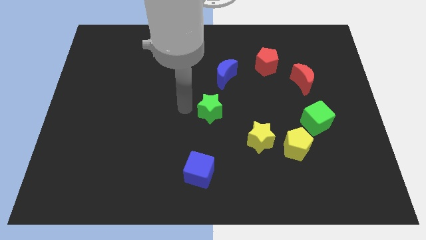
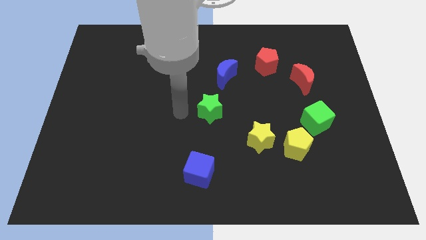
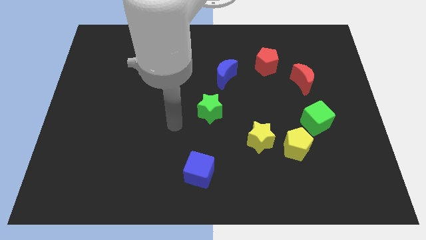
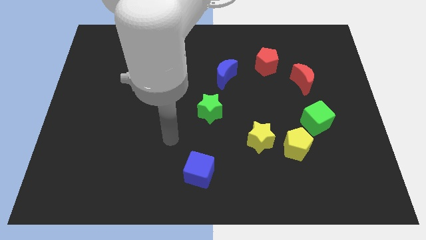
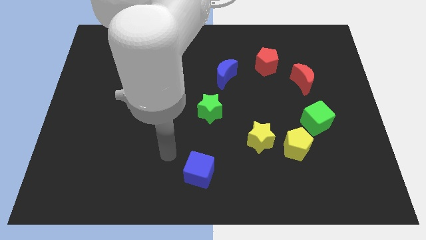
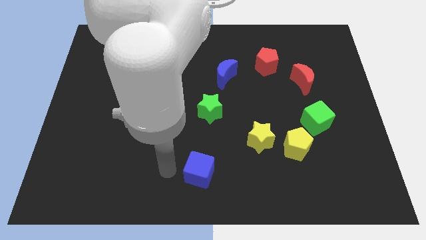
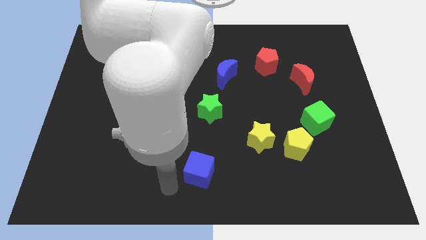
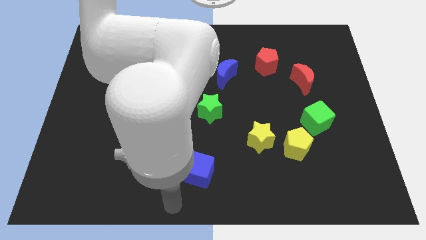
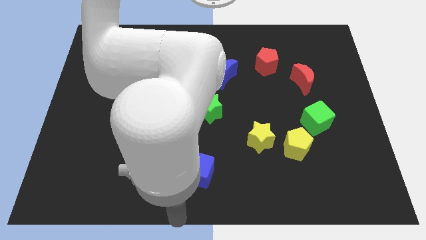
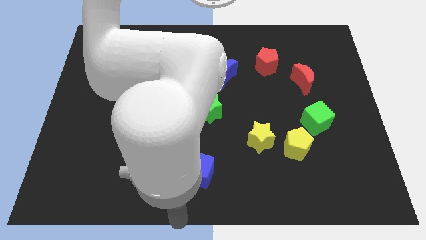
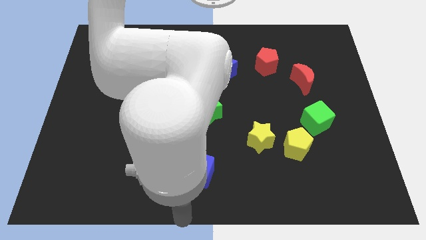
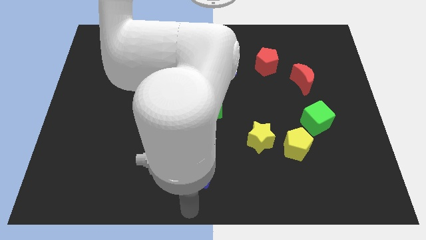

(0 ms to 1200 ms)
move your hand towards the bottom center of the board

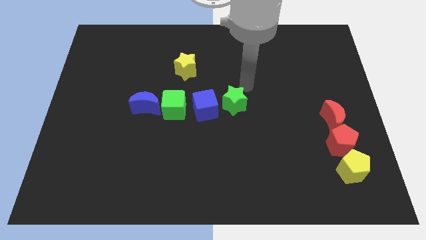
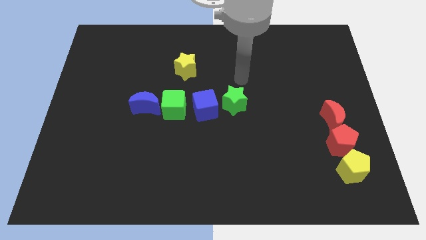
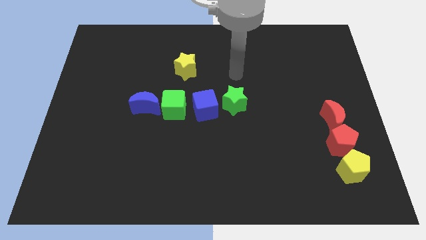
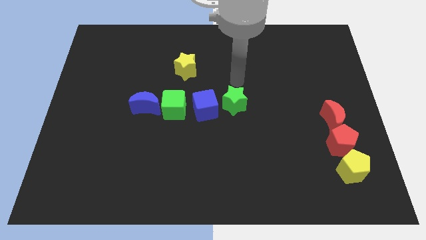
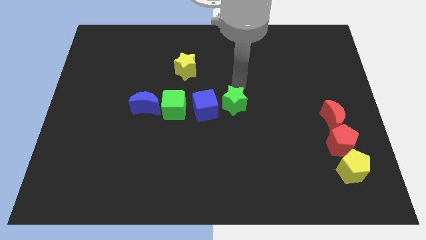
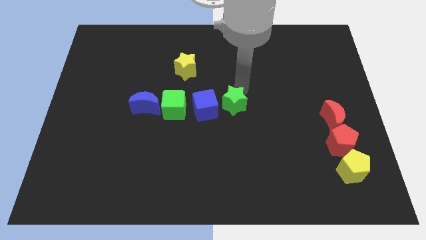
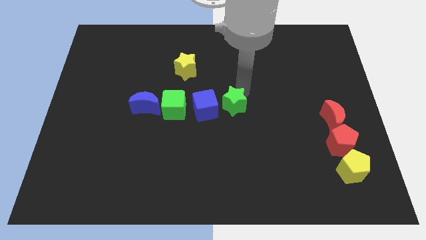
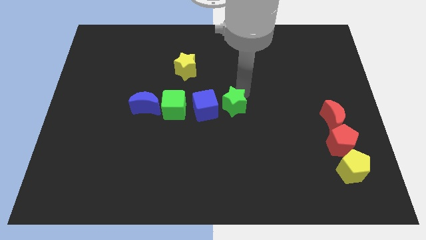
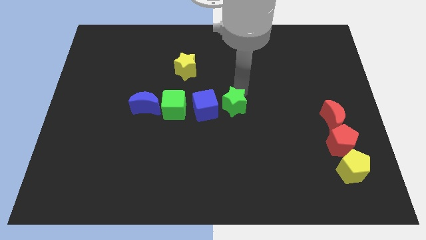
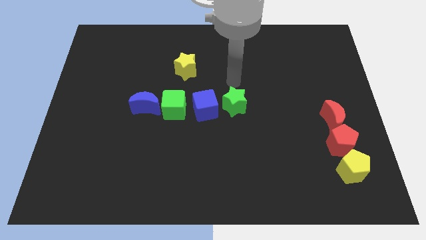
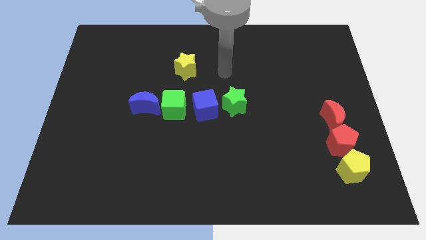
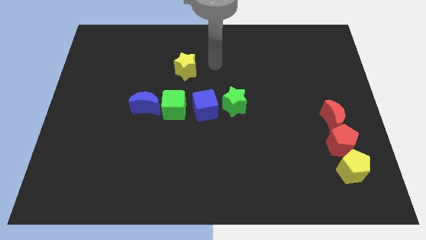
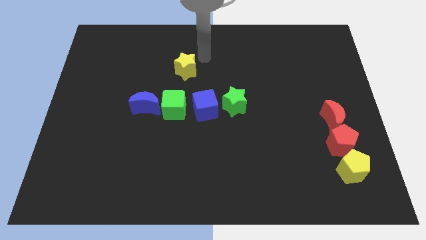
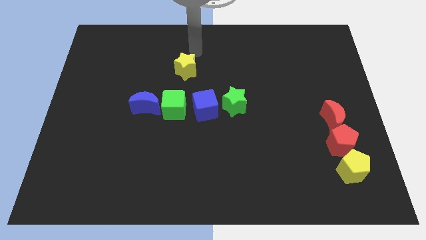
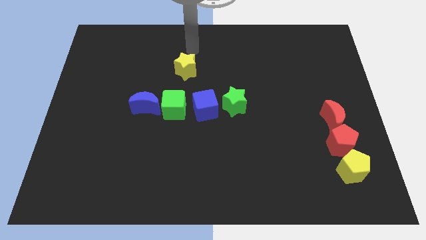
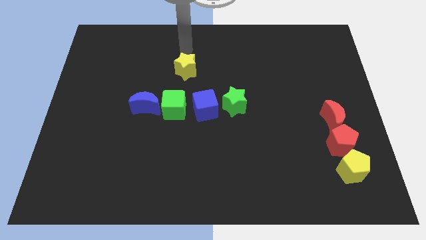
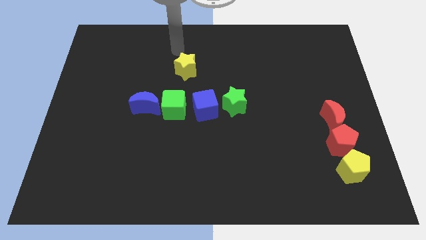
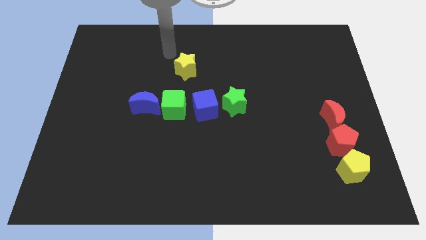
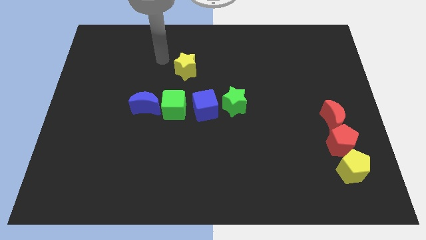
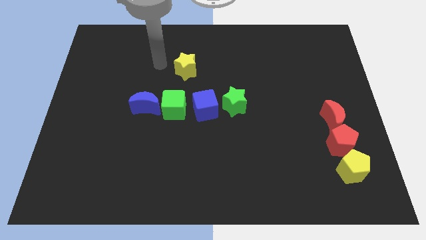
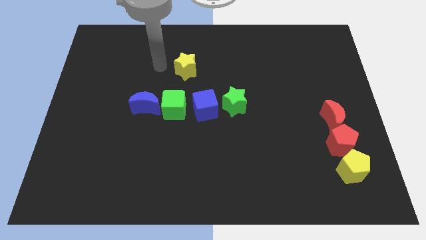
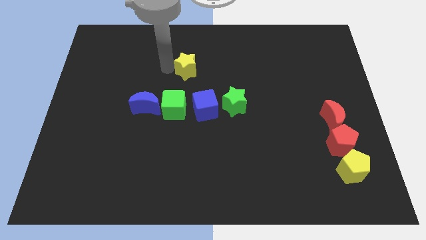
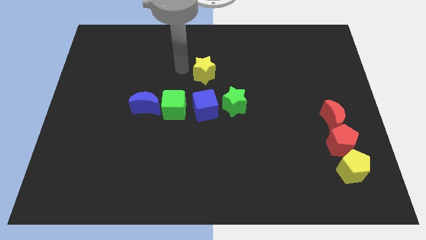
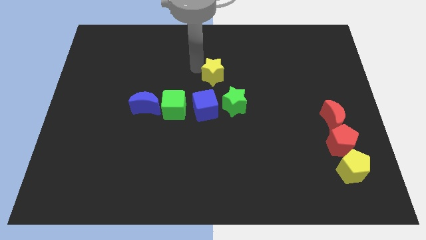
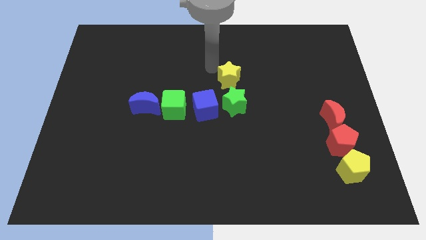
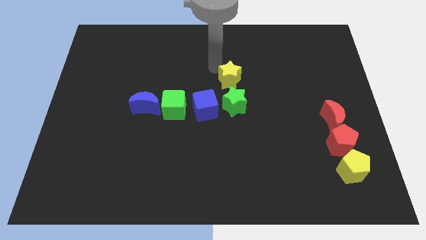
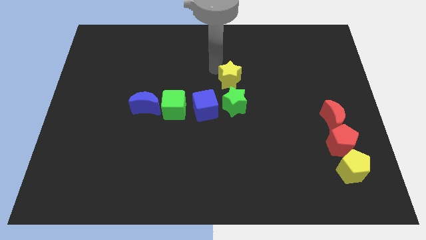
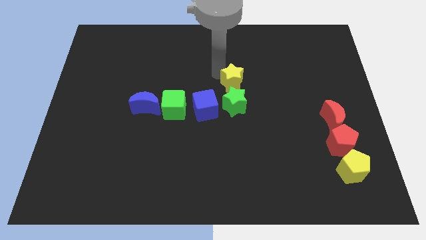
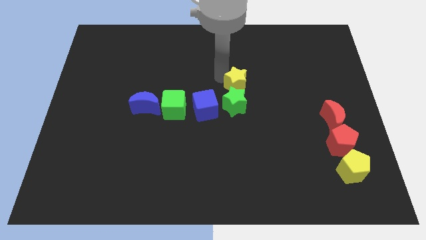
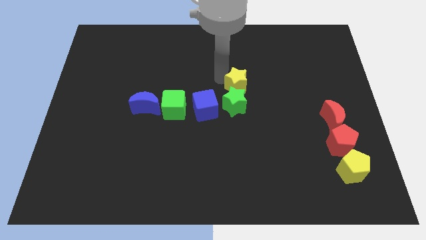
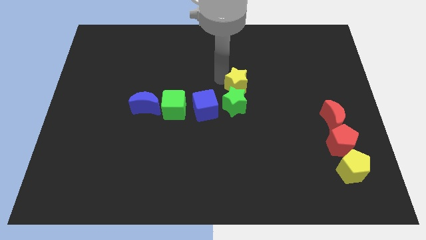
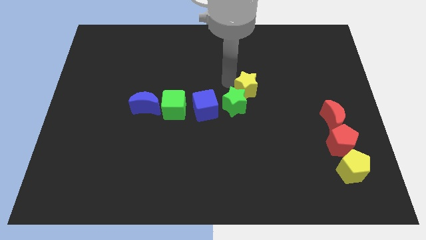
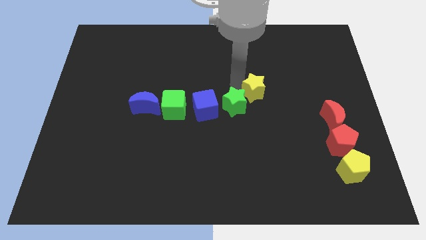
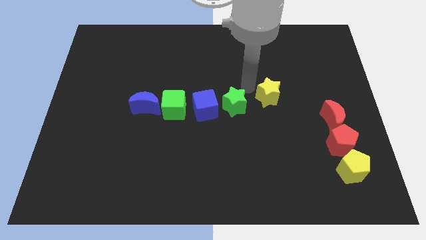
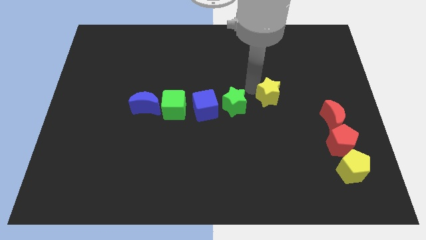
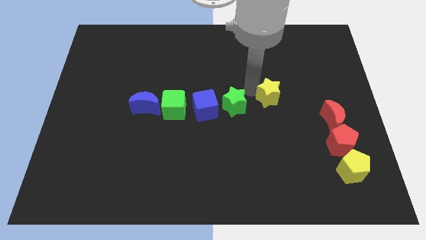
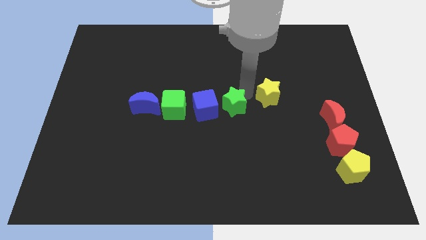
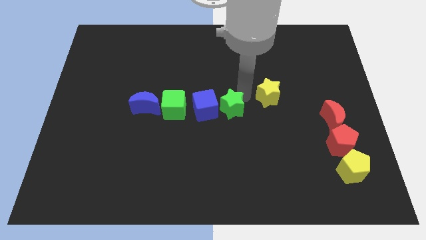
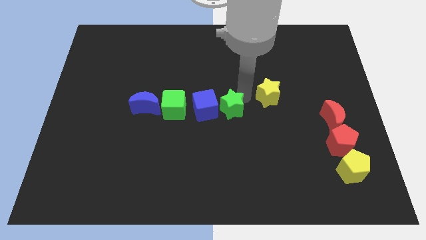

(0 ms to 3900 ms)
put the yellow star to the right of the green star

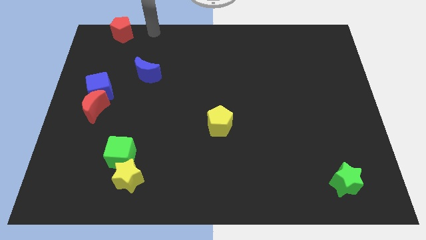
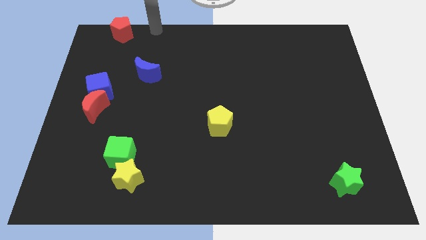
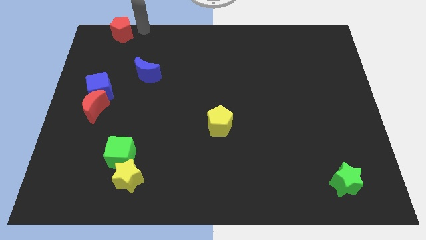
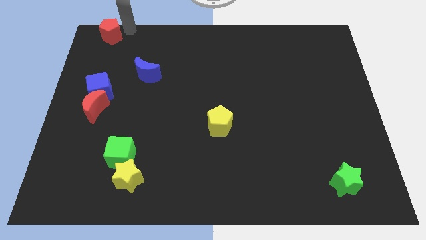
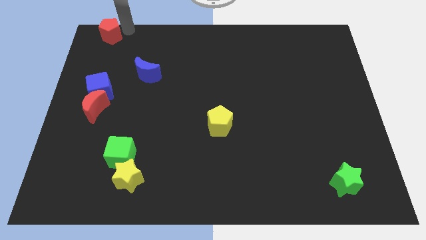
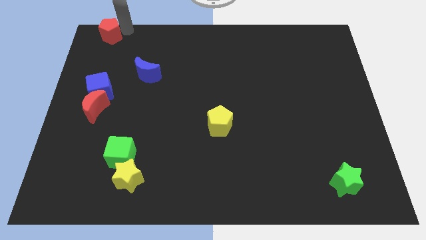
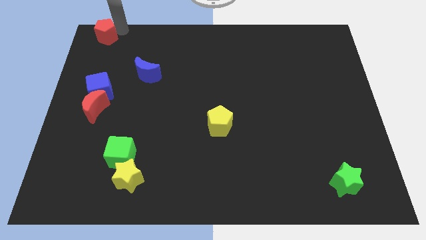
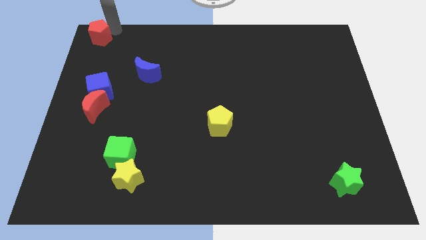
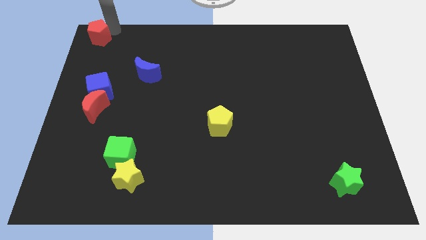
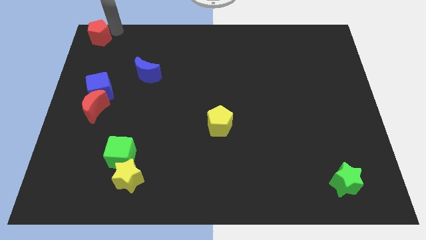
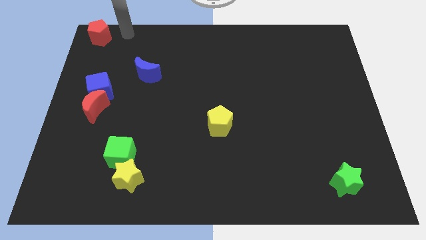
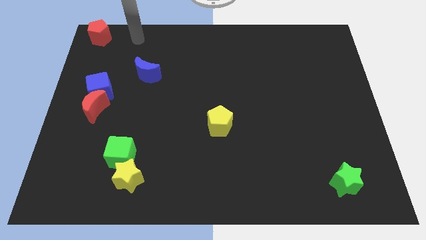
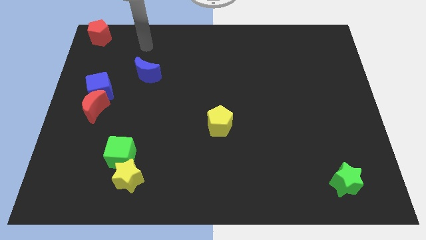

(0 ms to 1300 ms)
drag the red pentagon to the top left

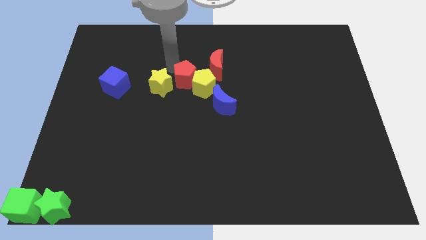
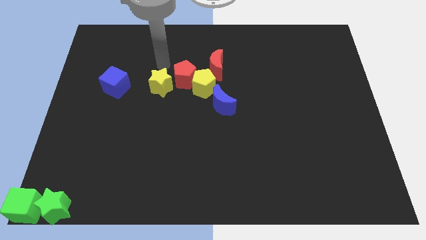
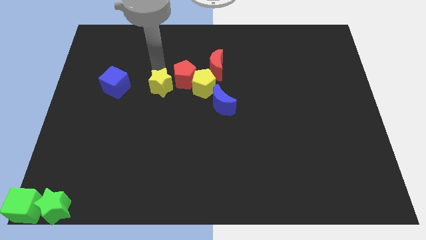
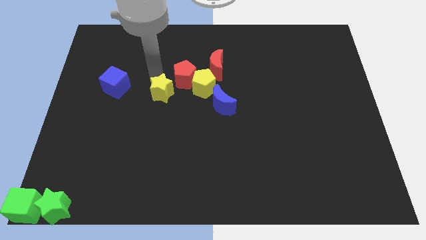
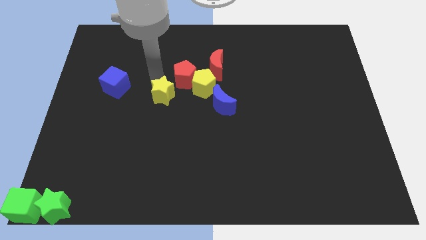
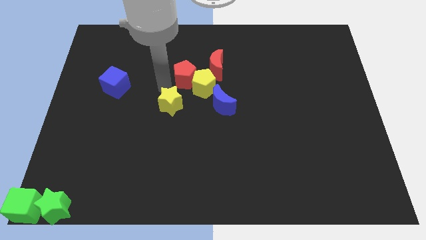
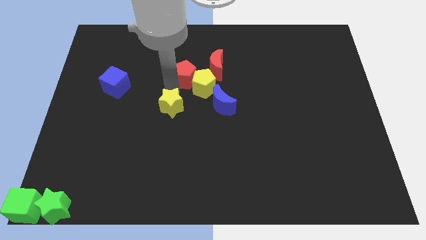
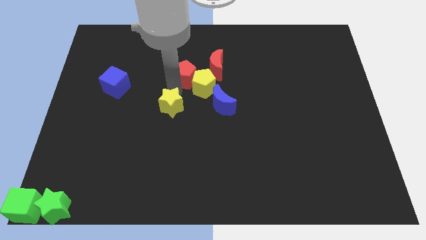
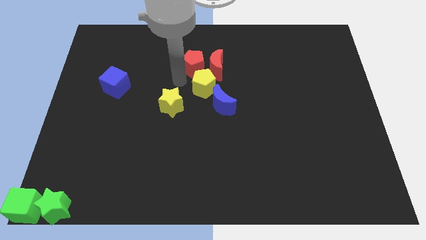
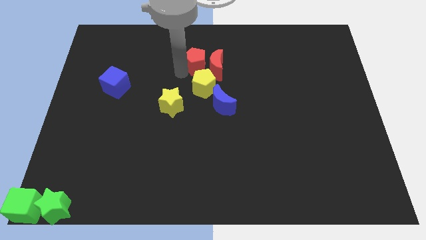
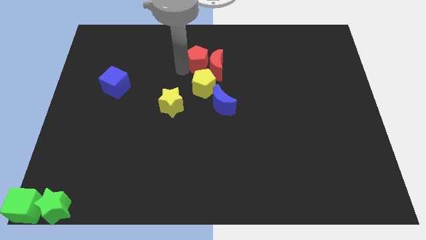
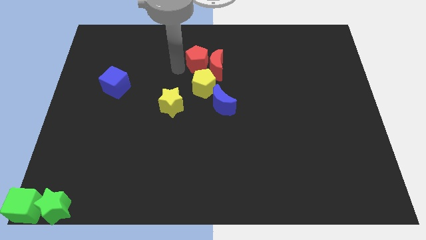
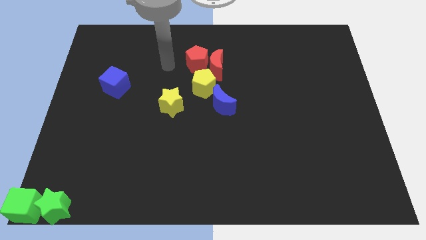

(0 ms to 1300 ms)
separate the red pentagon and the yellow star

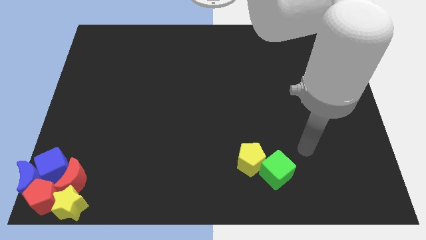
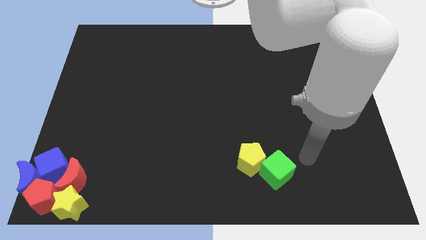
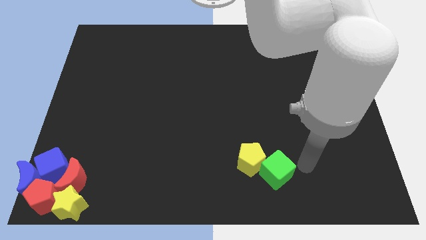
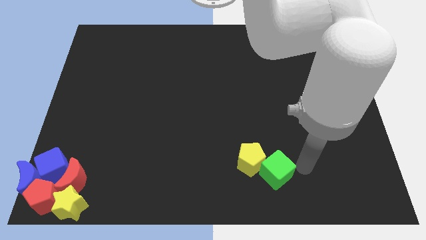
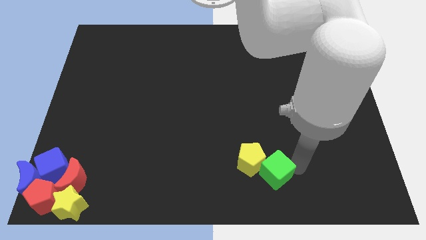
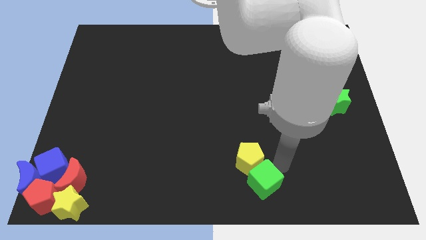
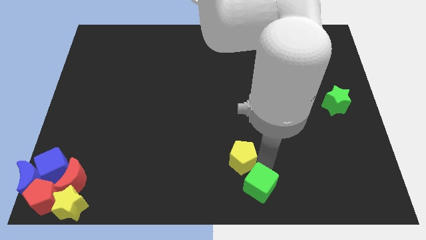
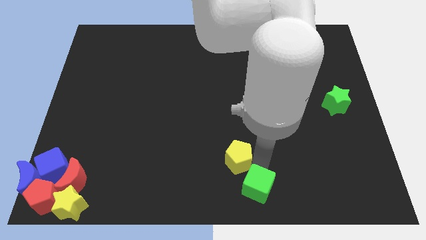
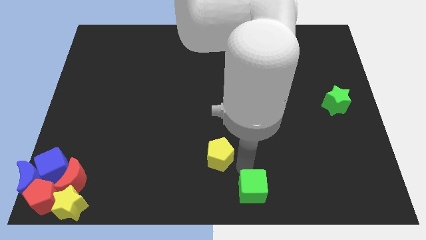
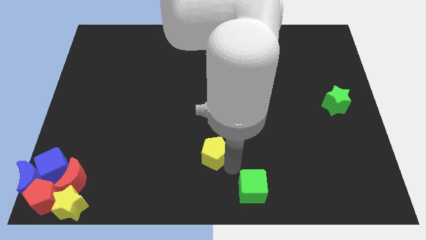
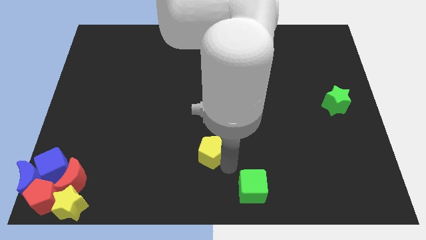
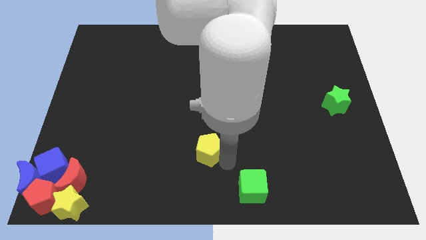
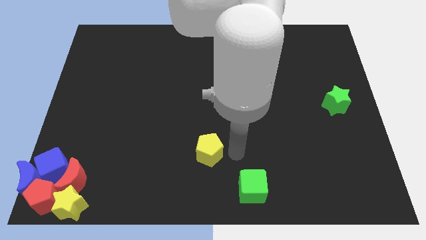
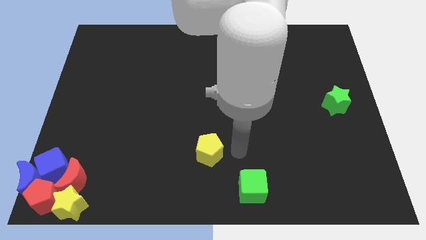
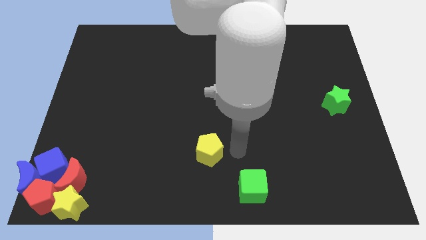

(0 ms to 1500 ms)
separate the yellow pentagon from the green cube
